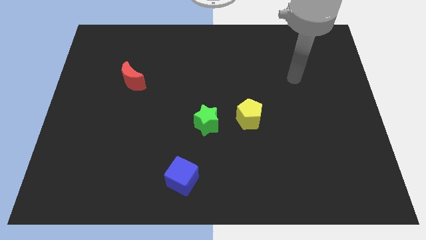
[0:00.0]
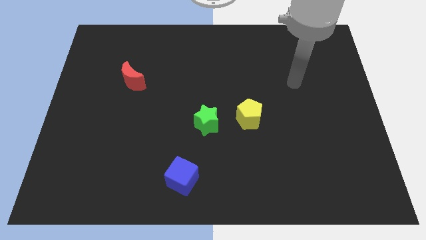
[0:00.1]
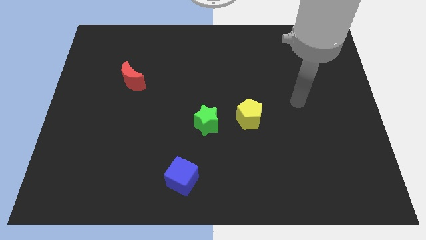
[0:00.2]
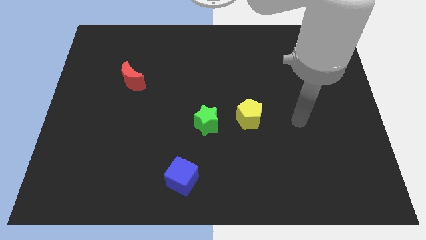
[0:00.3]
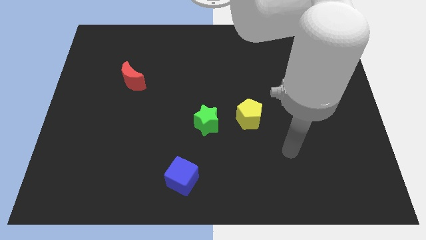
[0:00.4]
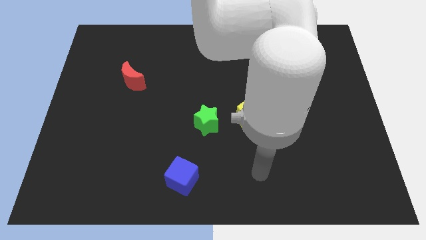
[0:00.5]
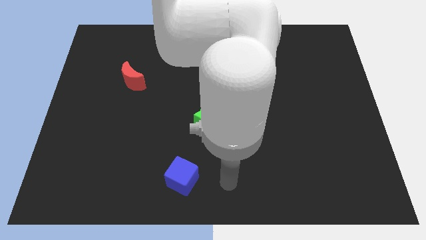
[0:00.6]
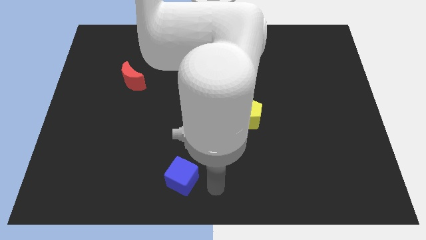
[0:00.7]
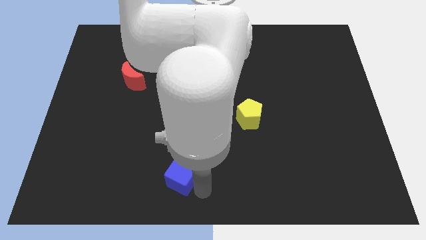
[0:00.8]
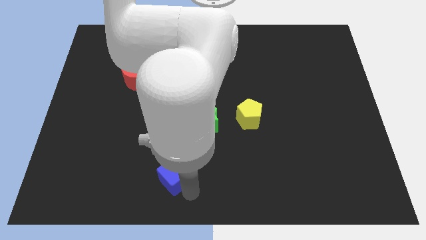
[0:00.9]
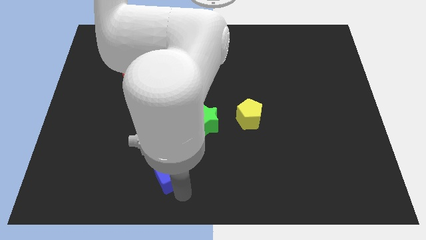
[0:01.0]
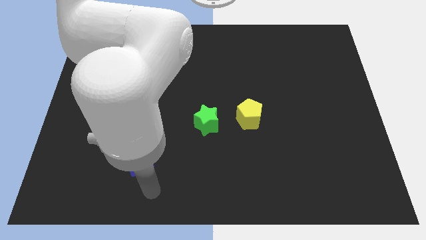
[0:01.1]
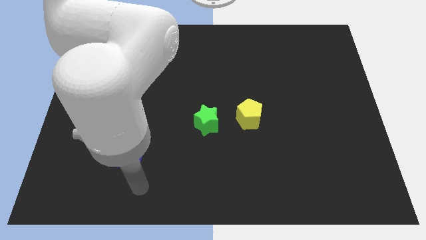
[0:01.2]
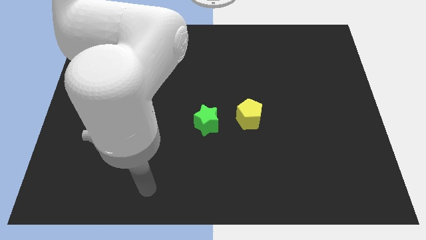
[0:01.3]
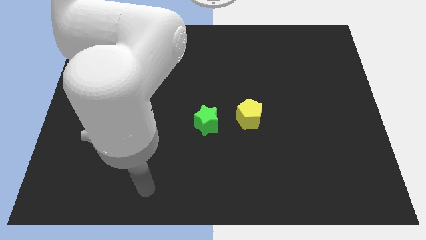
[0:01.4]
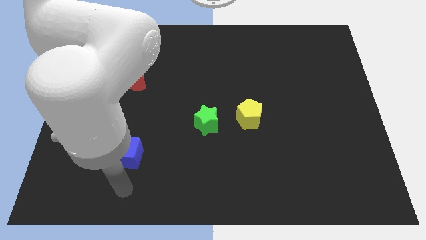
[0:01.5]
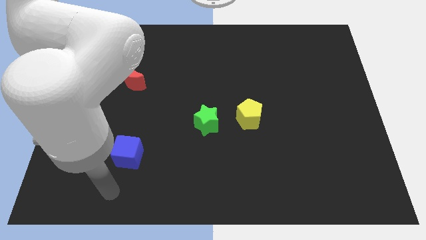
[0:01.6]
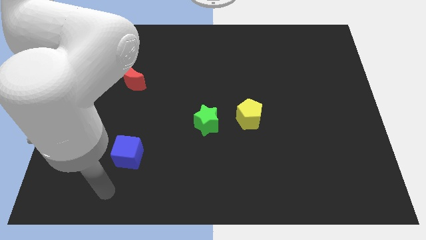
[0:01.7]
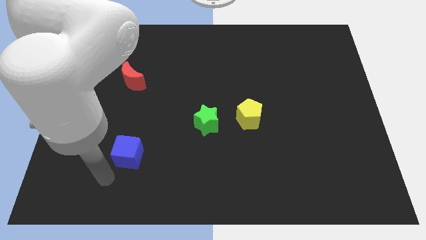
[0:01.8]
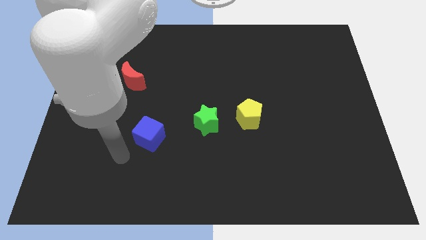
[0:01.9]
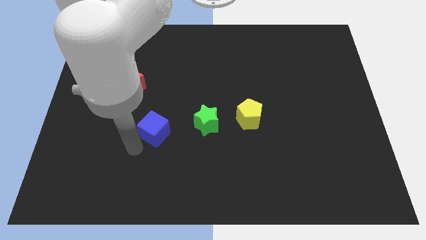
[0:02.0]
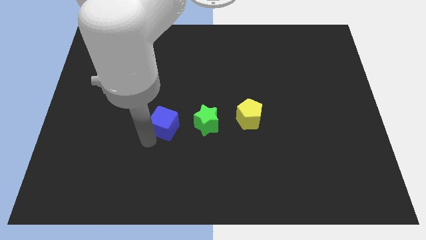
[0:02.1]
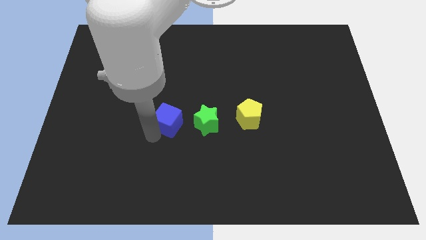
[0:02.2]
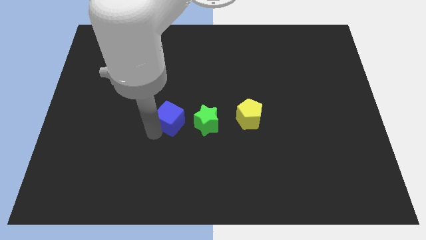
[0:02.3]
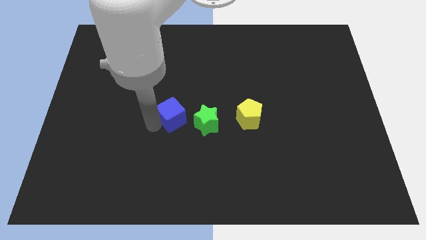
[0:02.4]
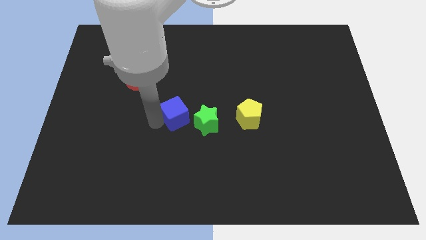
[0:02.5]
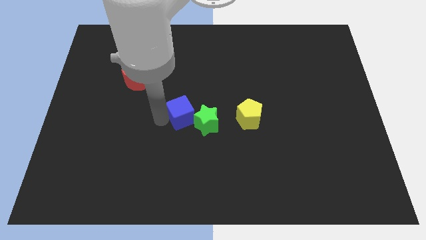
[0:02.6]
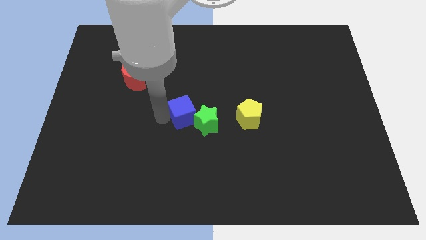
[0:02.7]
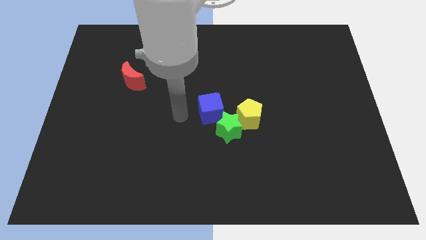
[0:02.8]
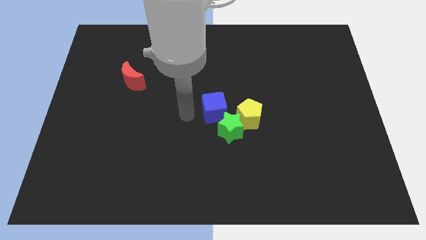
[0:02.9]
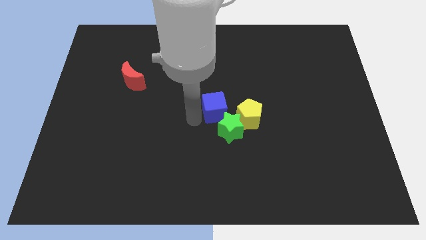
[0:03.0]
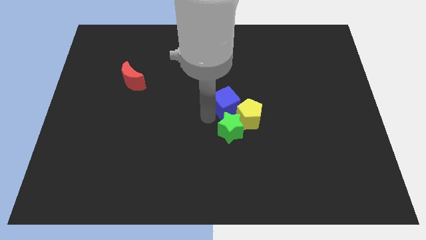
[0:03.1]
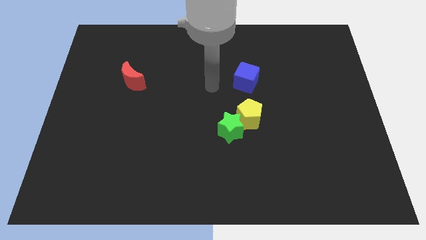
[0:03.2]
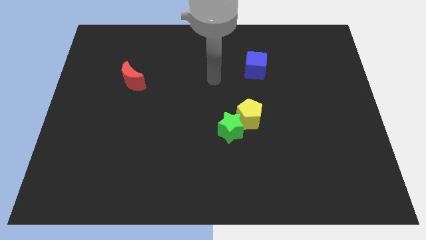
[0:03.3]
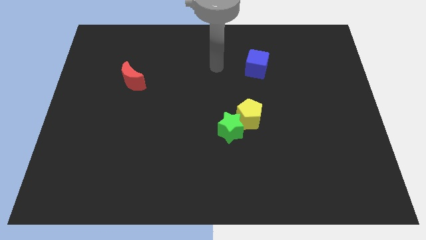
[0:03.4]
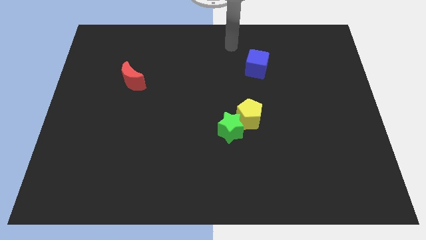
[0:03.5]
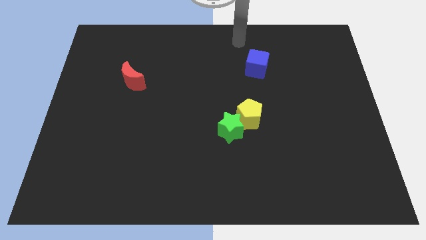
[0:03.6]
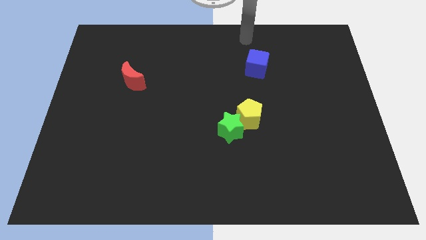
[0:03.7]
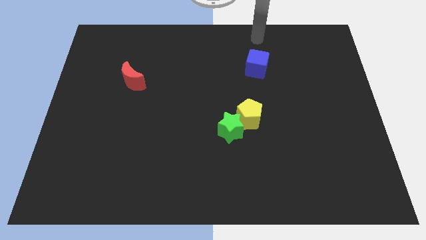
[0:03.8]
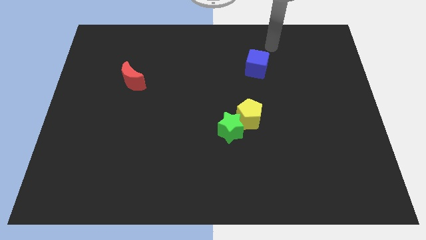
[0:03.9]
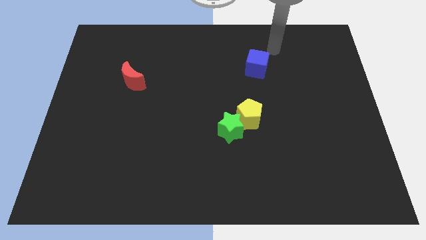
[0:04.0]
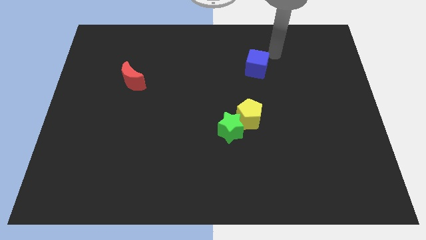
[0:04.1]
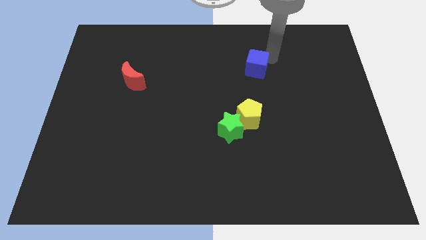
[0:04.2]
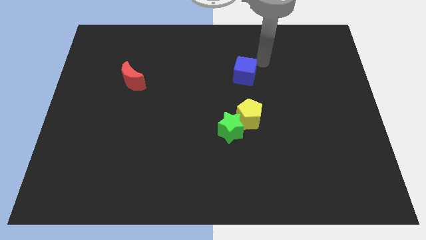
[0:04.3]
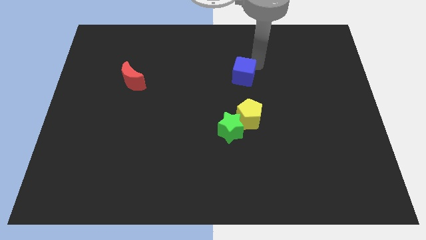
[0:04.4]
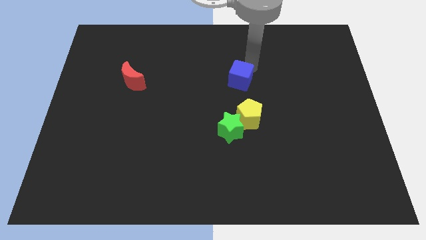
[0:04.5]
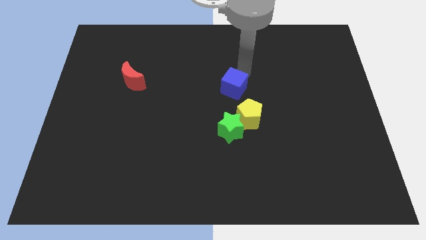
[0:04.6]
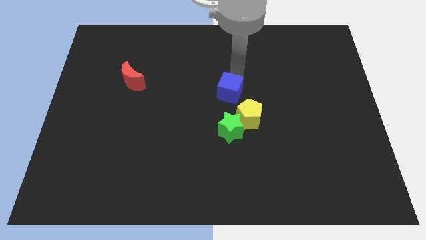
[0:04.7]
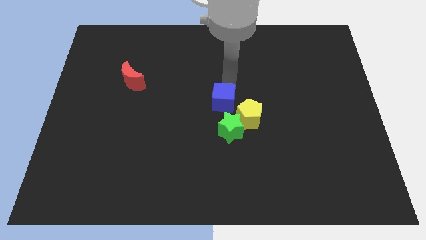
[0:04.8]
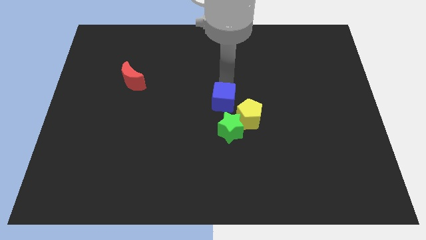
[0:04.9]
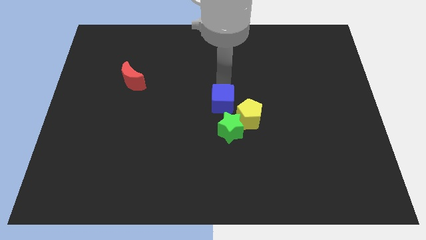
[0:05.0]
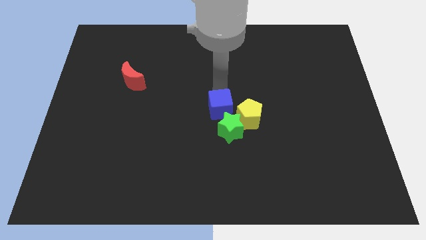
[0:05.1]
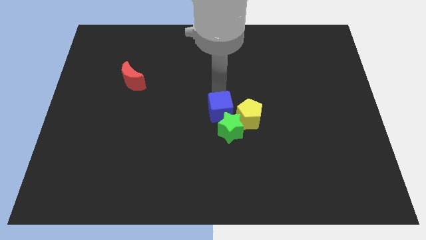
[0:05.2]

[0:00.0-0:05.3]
push the cube to the star

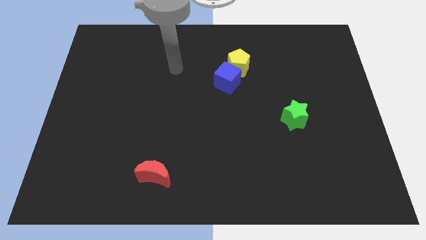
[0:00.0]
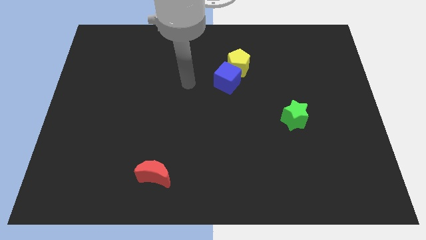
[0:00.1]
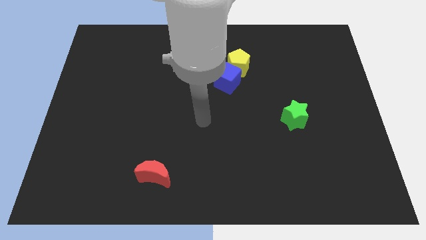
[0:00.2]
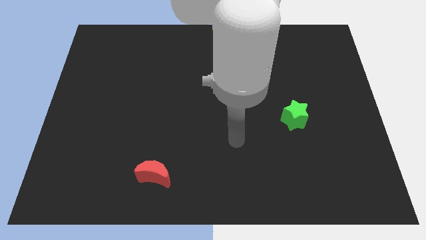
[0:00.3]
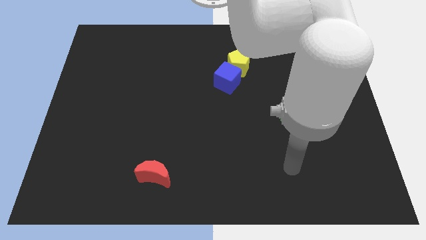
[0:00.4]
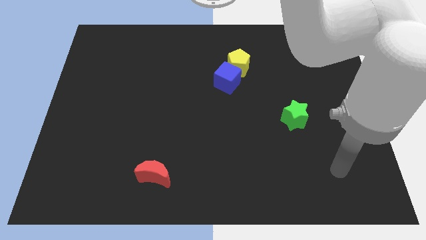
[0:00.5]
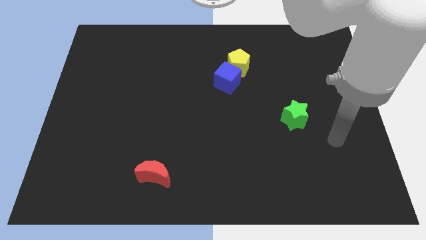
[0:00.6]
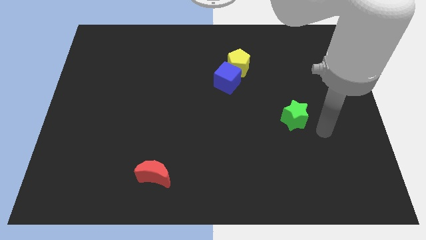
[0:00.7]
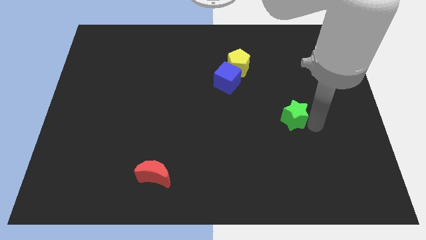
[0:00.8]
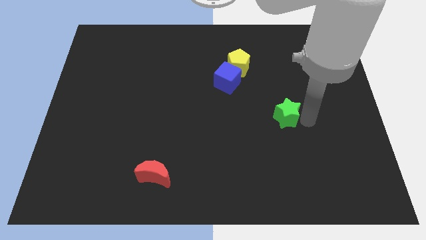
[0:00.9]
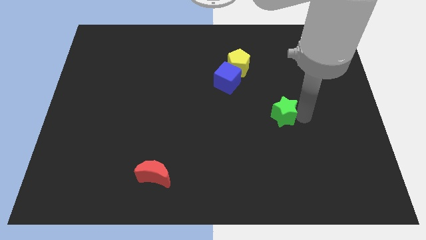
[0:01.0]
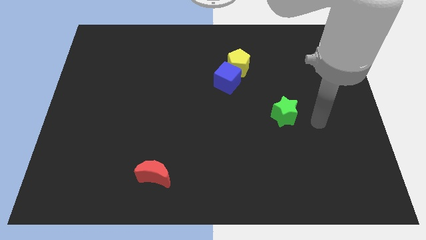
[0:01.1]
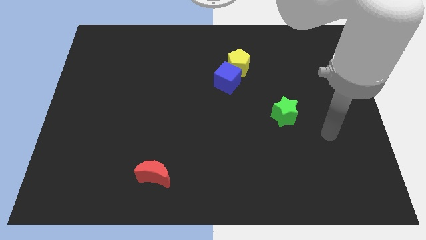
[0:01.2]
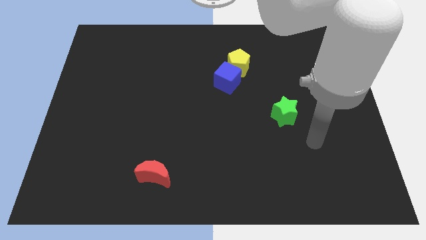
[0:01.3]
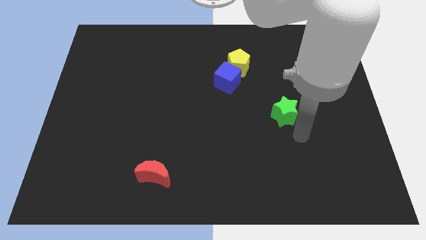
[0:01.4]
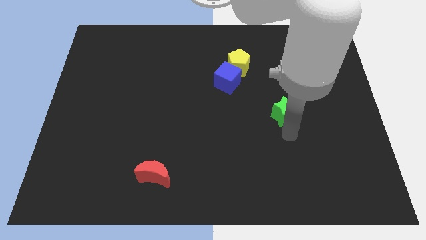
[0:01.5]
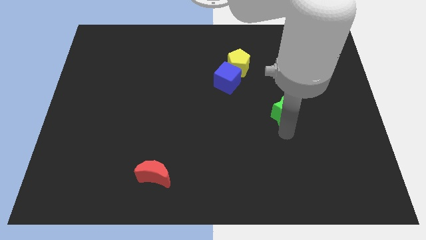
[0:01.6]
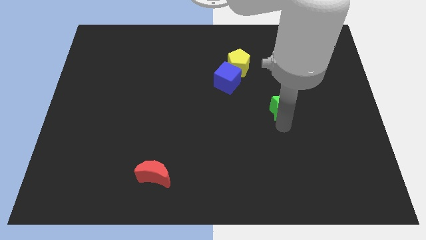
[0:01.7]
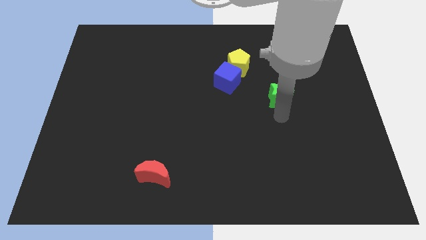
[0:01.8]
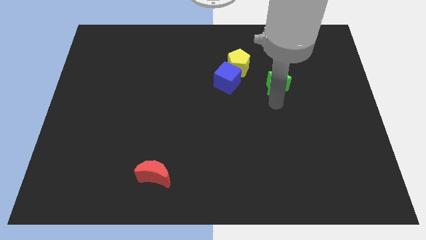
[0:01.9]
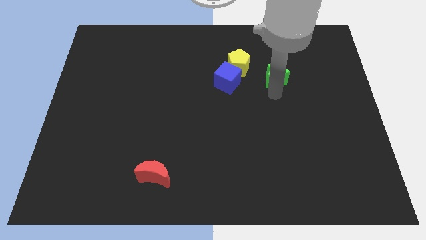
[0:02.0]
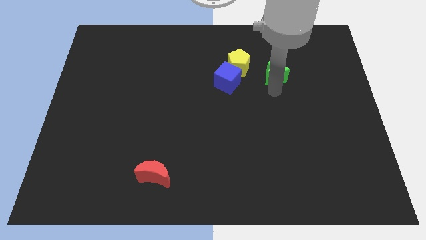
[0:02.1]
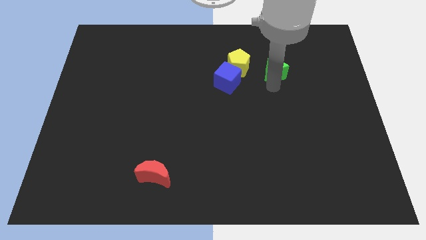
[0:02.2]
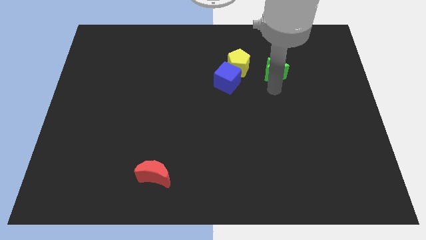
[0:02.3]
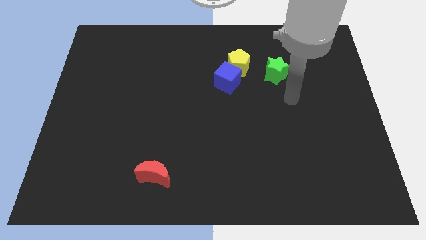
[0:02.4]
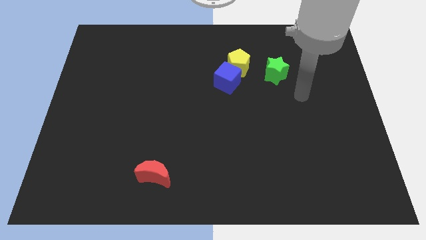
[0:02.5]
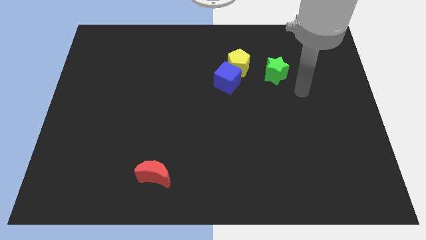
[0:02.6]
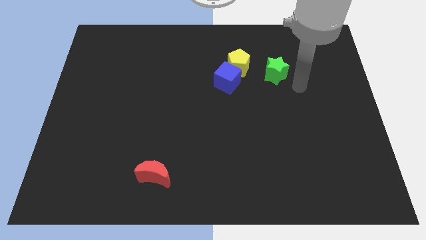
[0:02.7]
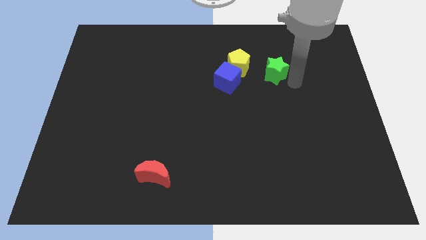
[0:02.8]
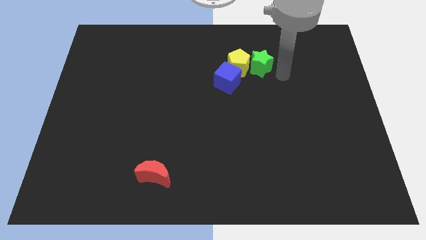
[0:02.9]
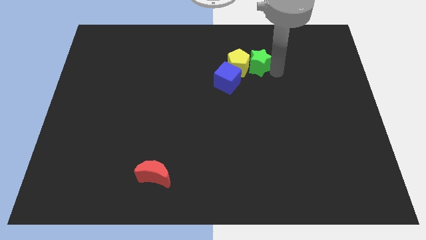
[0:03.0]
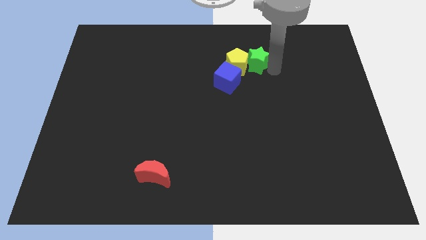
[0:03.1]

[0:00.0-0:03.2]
push the green star towards the yellow block
